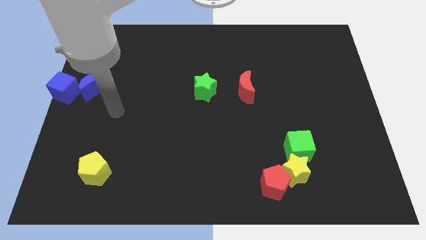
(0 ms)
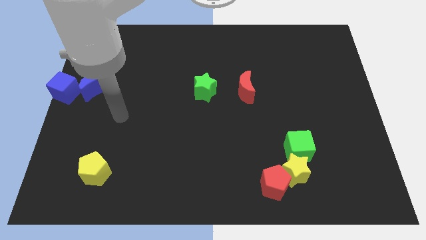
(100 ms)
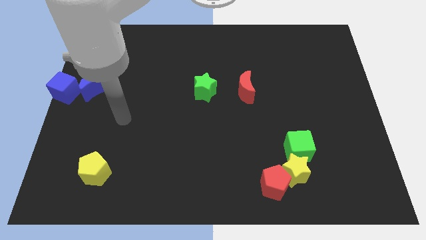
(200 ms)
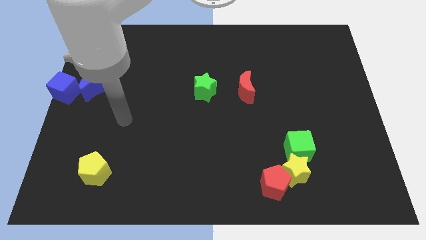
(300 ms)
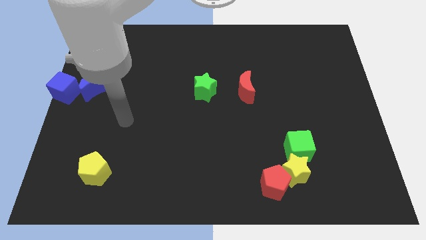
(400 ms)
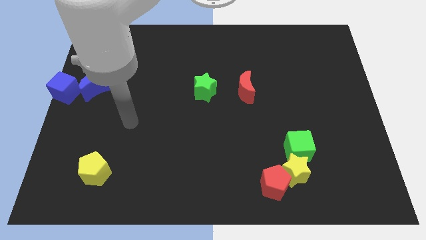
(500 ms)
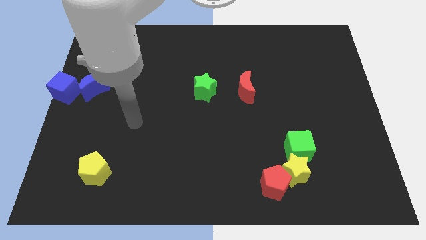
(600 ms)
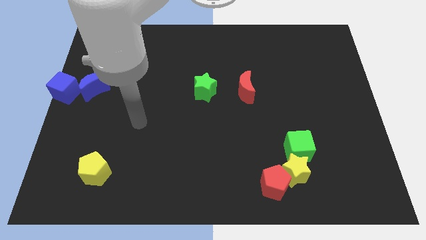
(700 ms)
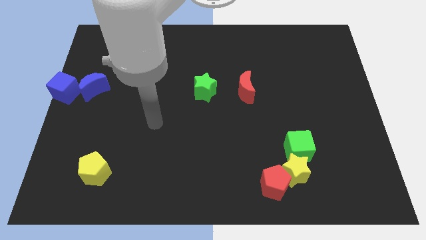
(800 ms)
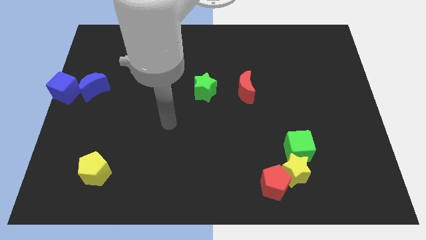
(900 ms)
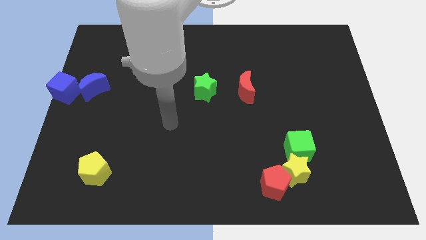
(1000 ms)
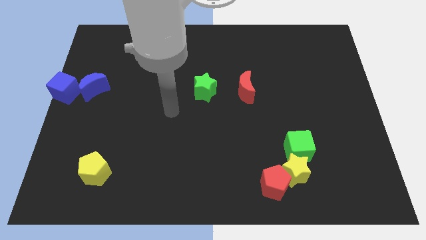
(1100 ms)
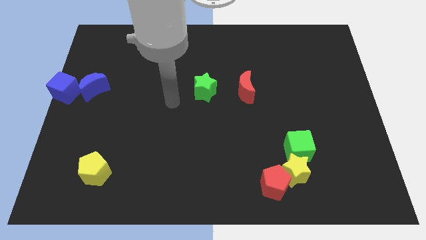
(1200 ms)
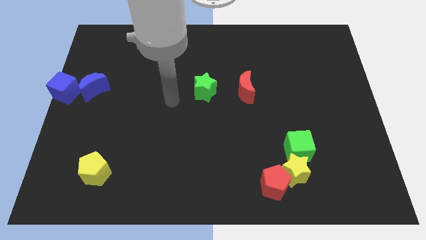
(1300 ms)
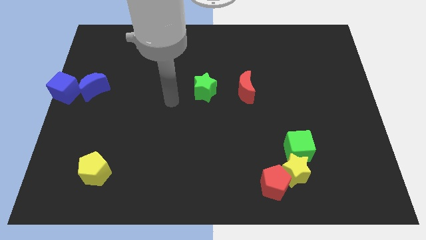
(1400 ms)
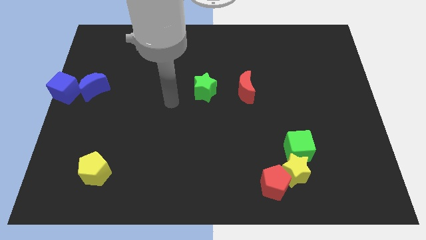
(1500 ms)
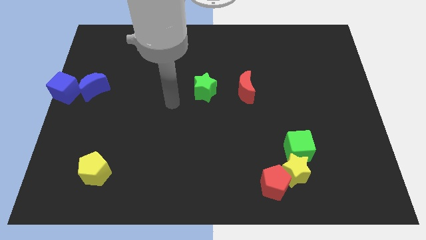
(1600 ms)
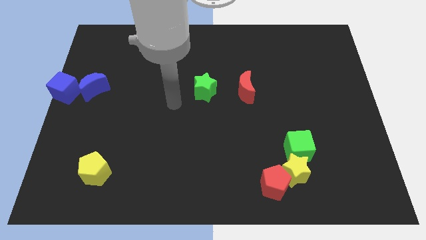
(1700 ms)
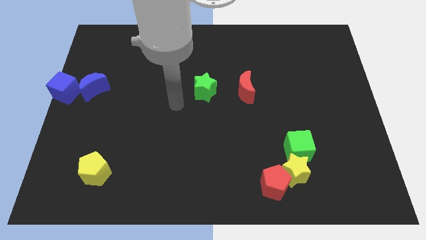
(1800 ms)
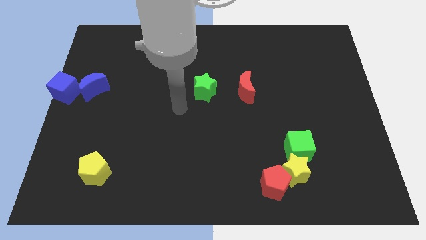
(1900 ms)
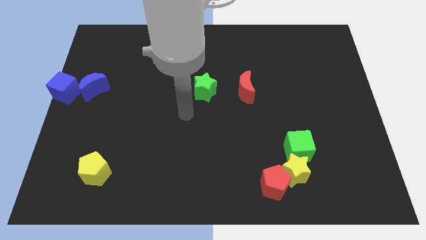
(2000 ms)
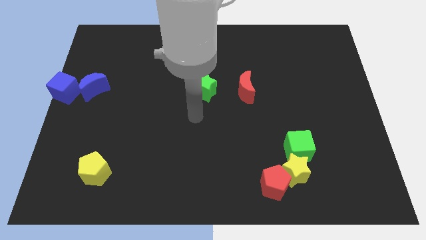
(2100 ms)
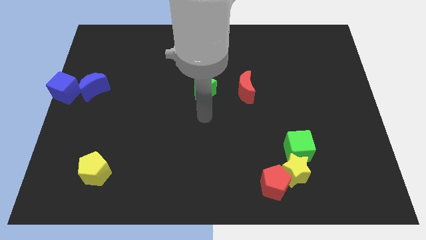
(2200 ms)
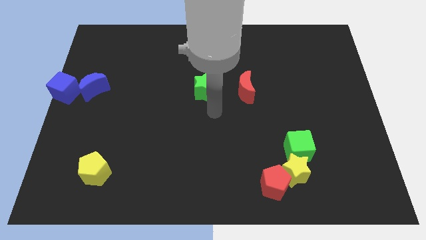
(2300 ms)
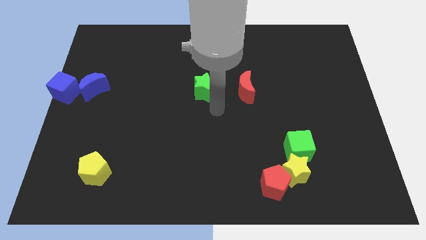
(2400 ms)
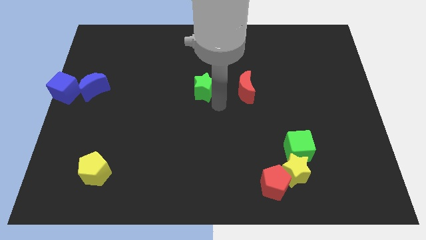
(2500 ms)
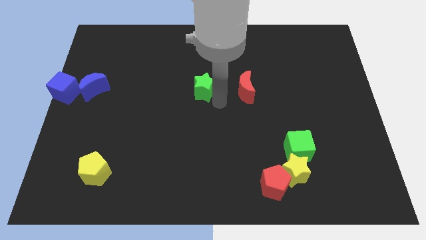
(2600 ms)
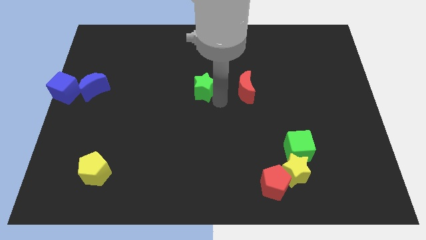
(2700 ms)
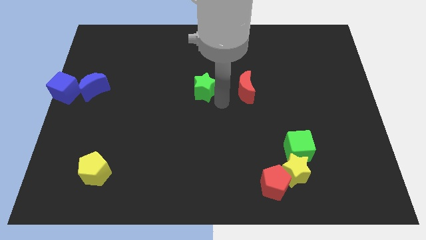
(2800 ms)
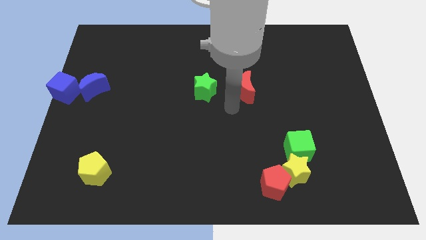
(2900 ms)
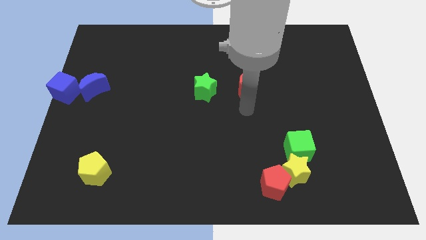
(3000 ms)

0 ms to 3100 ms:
move your arm and point below the red moon

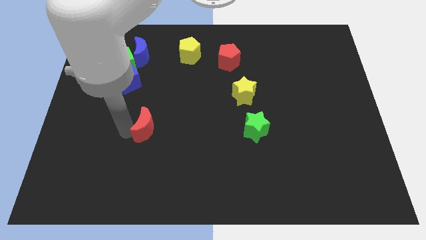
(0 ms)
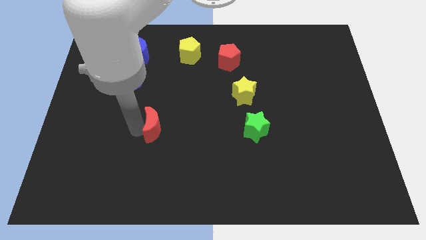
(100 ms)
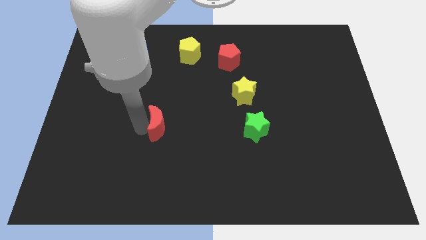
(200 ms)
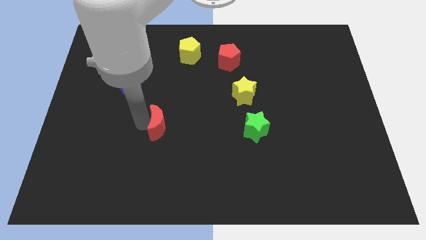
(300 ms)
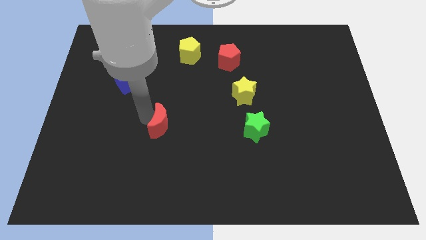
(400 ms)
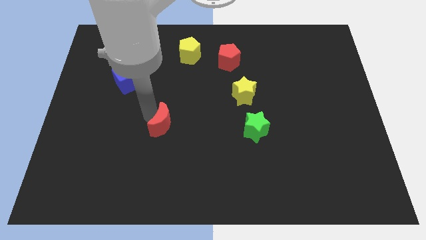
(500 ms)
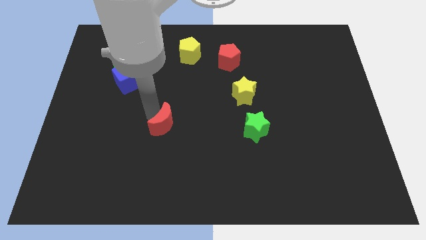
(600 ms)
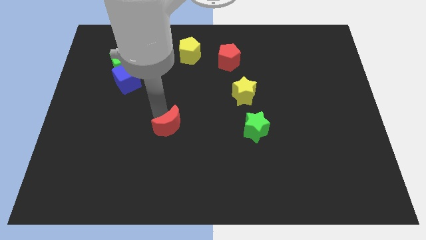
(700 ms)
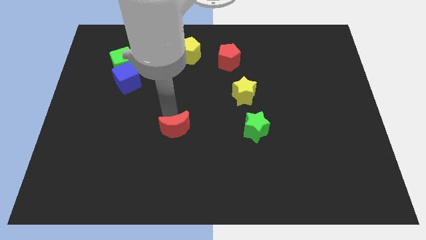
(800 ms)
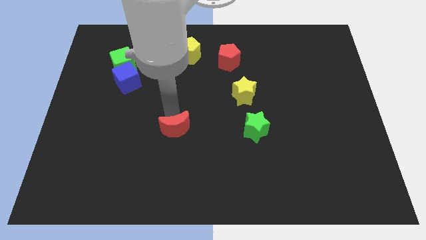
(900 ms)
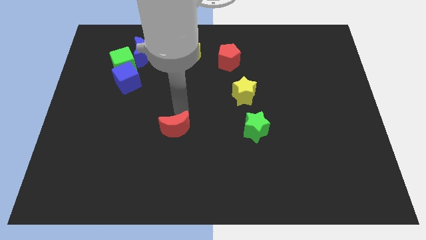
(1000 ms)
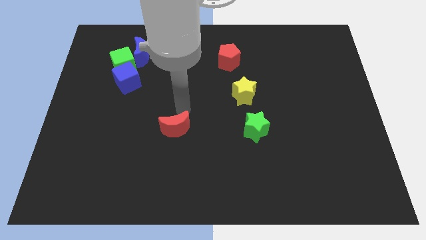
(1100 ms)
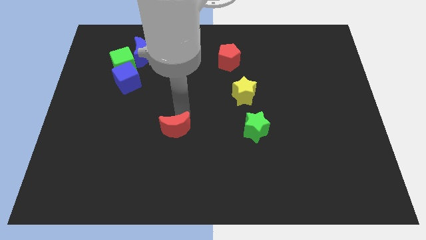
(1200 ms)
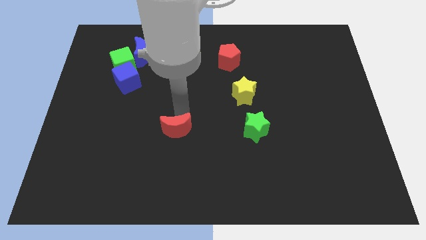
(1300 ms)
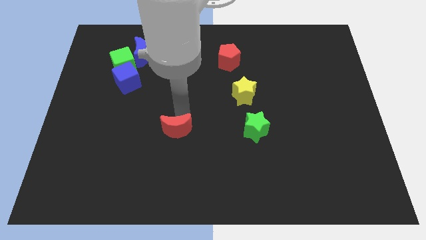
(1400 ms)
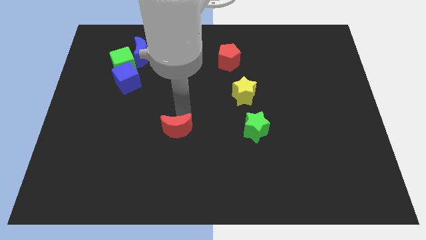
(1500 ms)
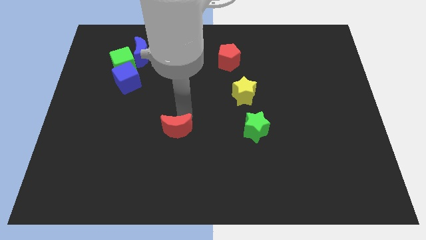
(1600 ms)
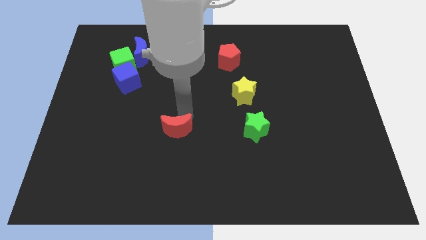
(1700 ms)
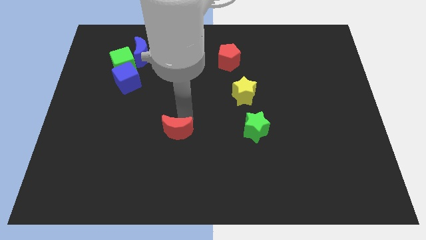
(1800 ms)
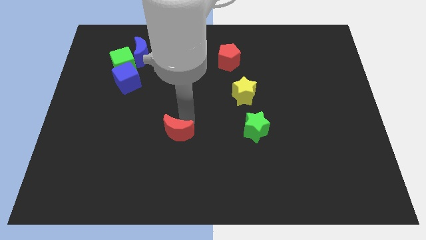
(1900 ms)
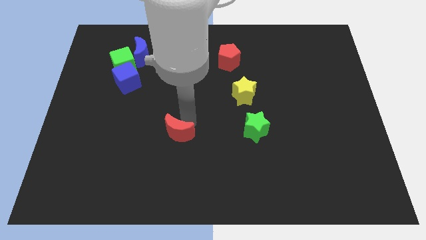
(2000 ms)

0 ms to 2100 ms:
move the red crescent parallel to the green star

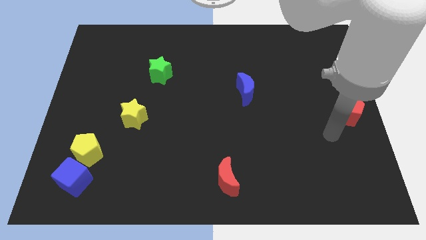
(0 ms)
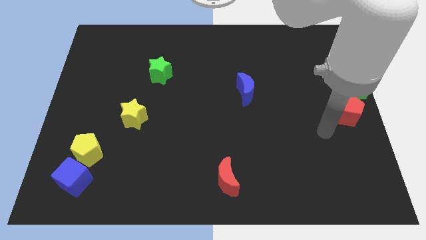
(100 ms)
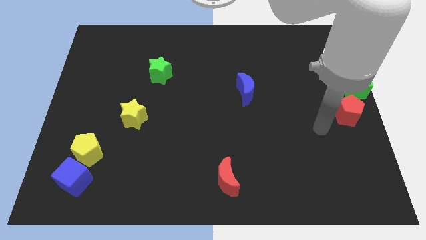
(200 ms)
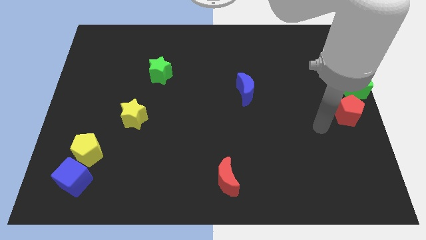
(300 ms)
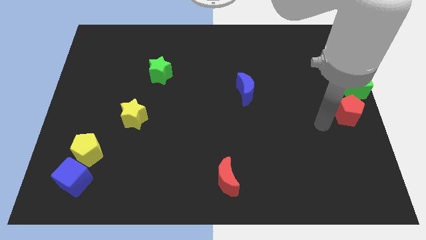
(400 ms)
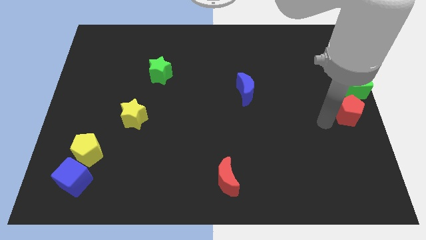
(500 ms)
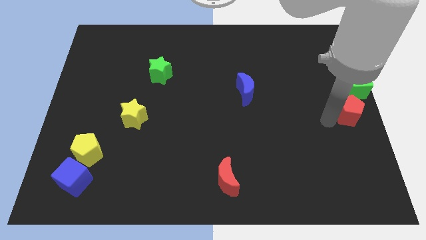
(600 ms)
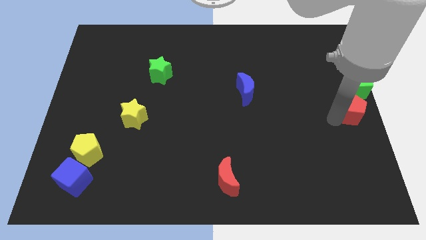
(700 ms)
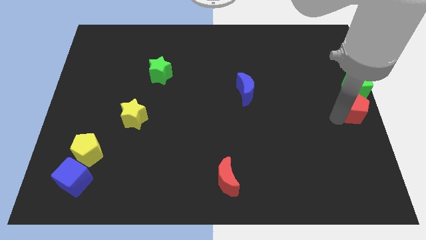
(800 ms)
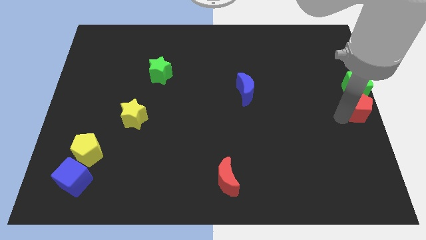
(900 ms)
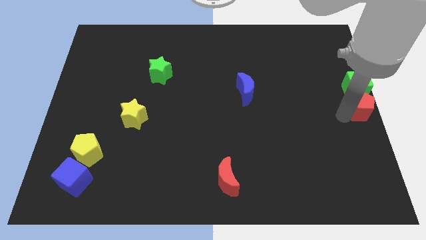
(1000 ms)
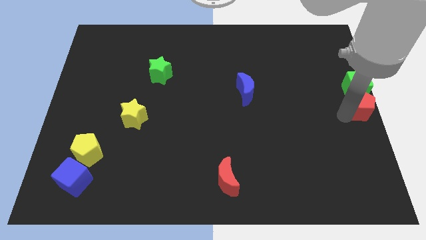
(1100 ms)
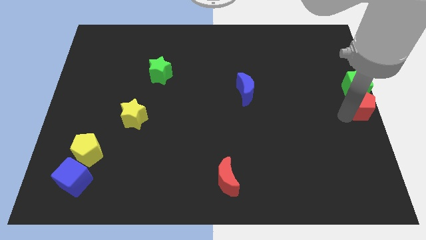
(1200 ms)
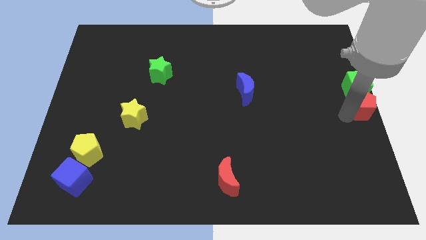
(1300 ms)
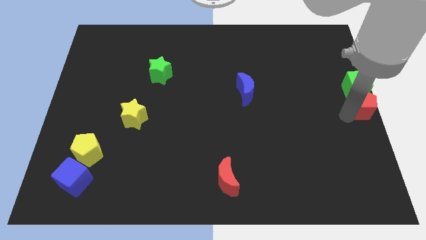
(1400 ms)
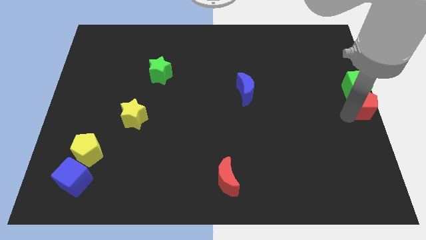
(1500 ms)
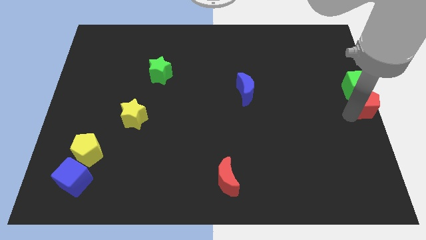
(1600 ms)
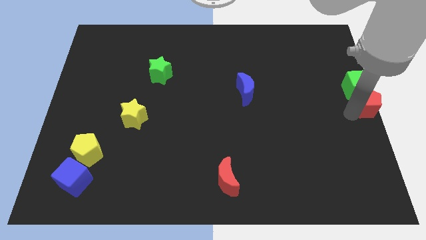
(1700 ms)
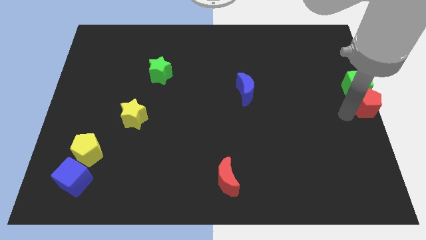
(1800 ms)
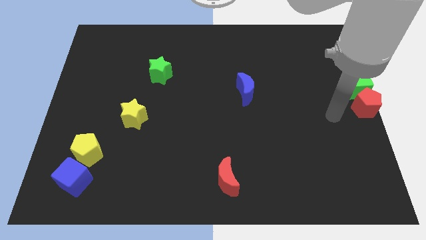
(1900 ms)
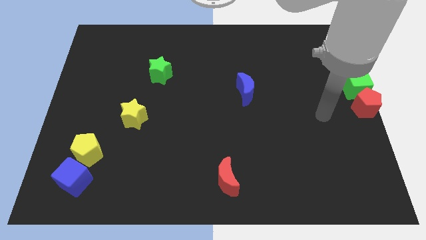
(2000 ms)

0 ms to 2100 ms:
push the red pentagon below the green cube

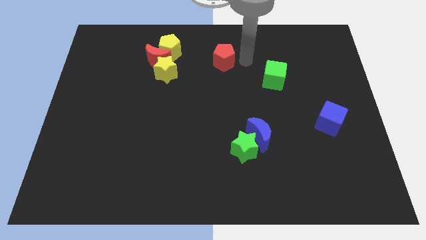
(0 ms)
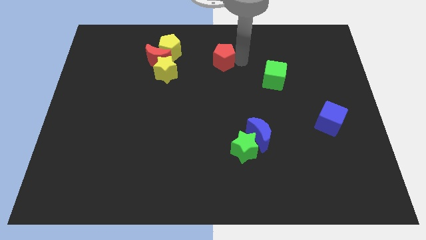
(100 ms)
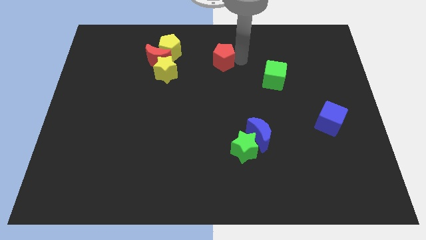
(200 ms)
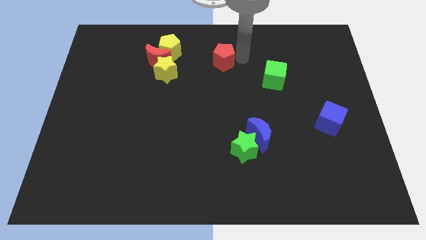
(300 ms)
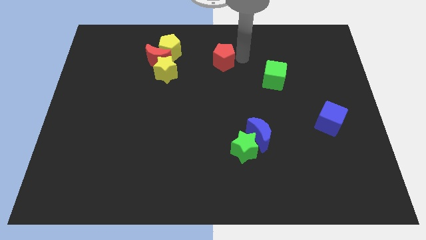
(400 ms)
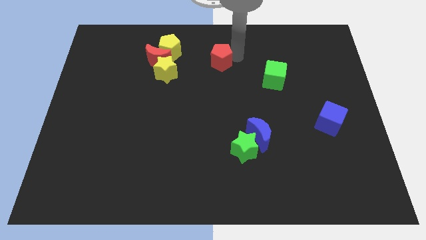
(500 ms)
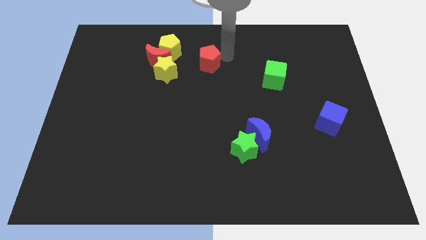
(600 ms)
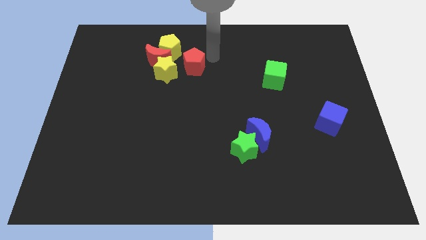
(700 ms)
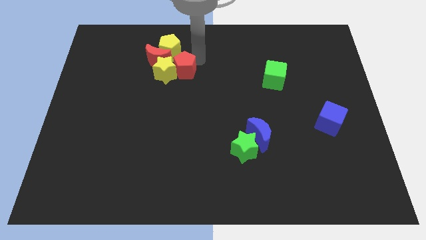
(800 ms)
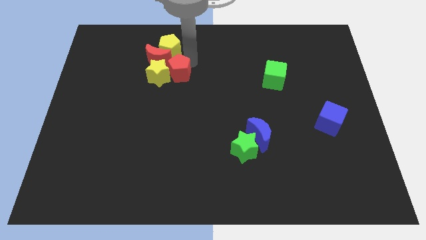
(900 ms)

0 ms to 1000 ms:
push the red pentagon towards the yellow star

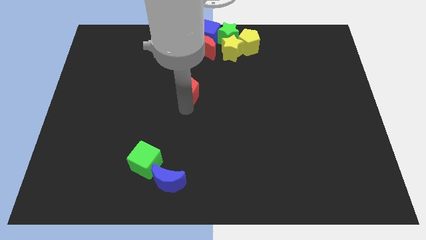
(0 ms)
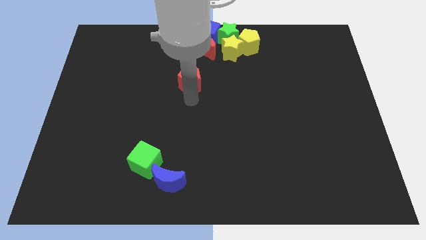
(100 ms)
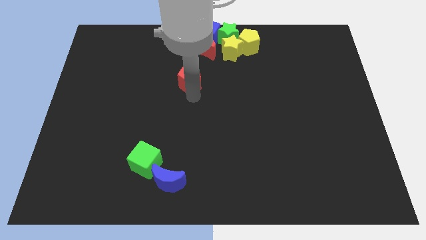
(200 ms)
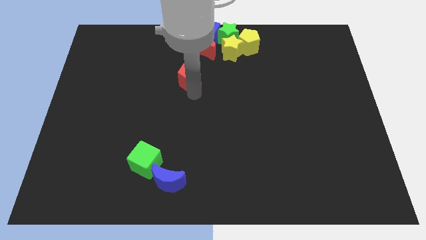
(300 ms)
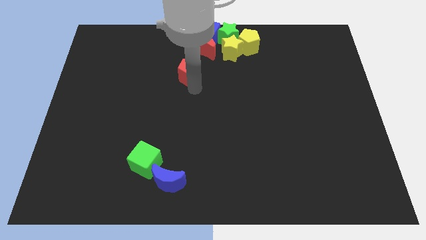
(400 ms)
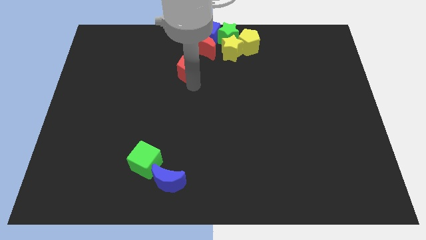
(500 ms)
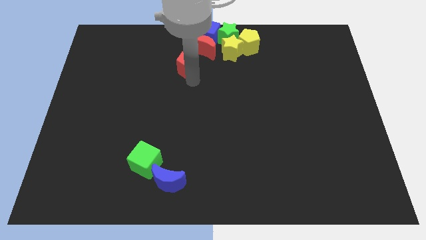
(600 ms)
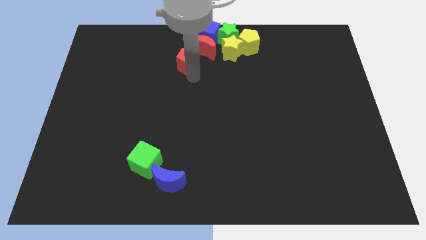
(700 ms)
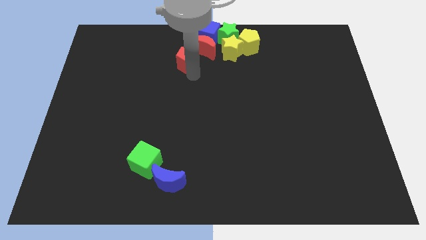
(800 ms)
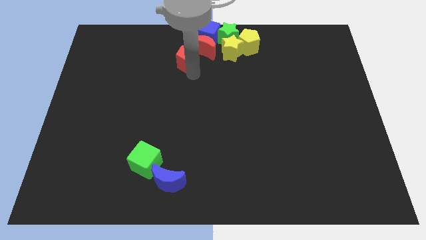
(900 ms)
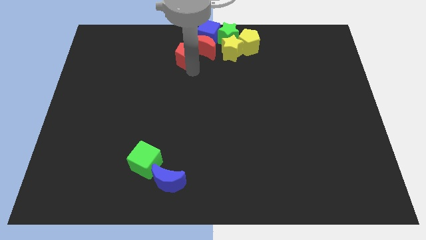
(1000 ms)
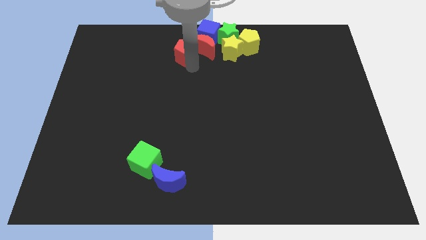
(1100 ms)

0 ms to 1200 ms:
move the red pentagon into the group of blocks
